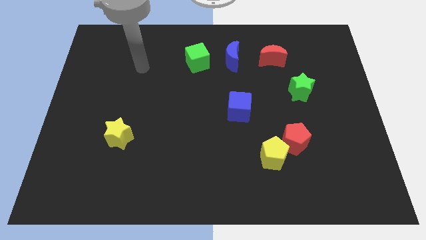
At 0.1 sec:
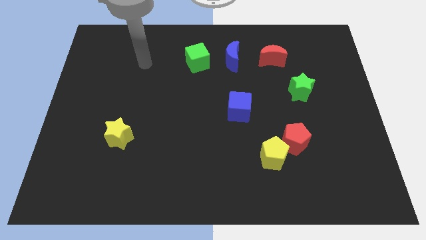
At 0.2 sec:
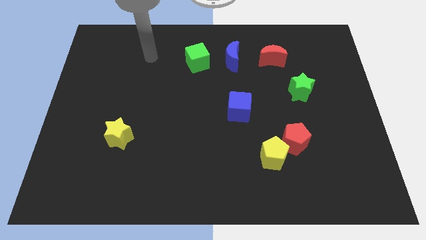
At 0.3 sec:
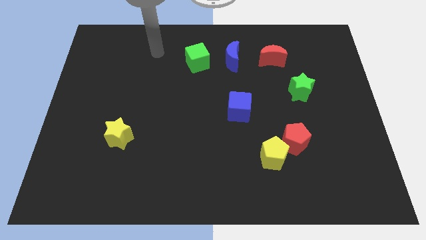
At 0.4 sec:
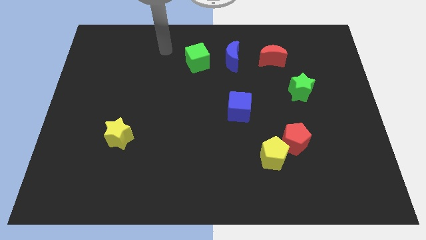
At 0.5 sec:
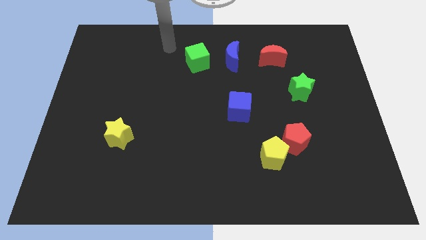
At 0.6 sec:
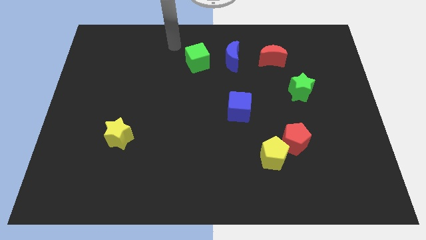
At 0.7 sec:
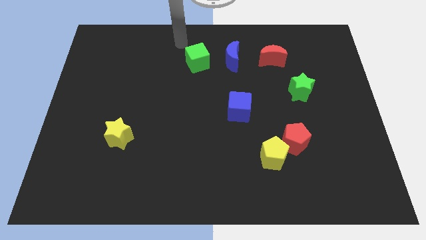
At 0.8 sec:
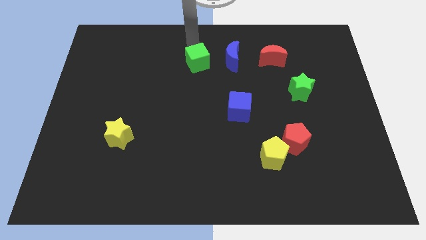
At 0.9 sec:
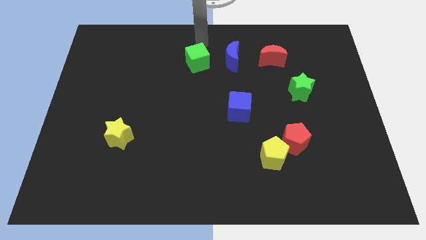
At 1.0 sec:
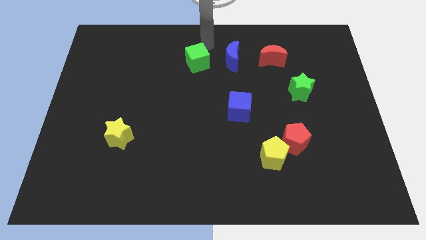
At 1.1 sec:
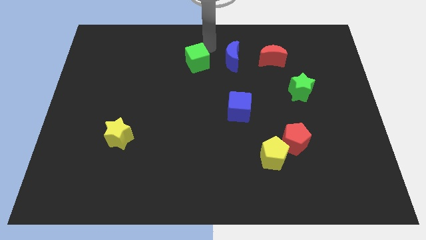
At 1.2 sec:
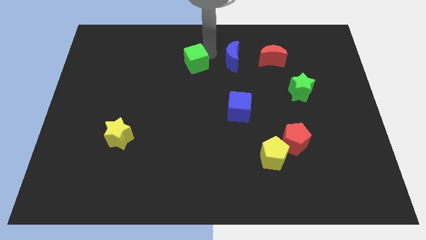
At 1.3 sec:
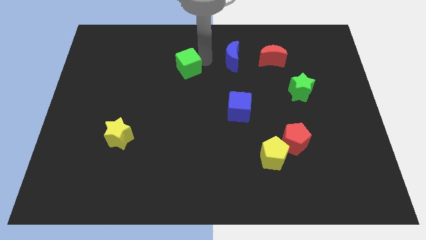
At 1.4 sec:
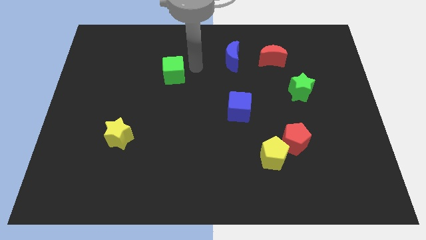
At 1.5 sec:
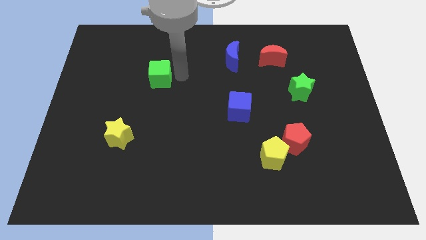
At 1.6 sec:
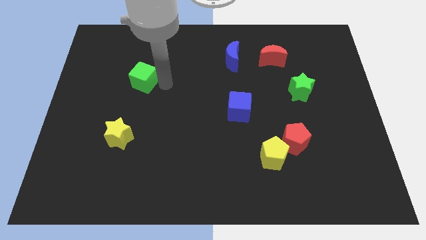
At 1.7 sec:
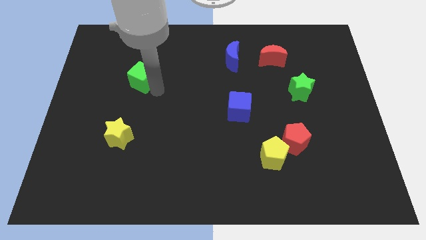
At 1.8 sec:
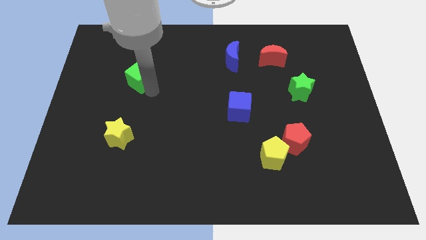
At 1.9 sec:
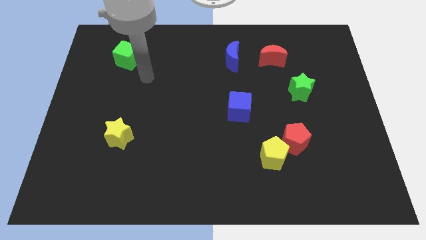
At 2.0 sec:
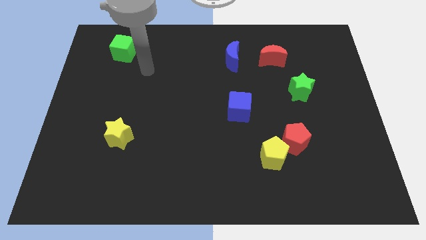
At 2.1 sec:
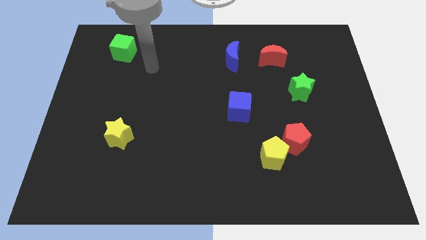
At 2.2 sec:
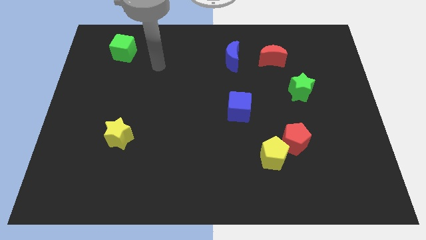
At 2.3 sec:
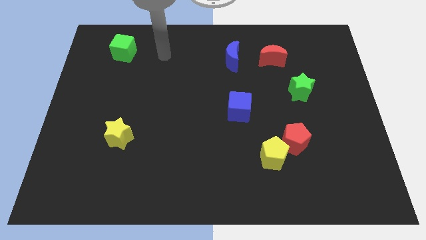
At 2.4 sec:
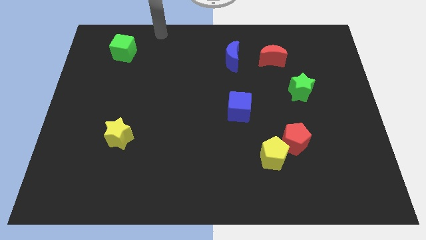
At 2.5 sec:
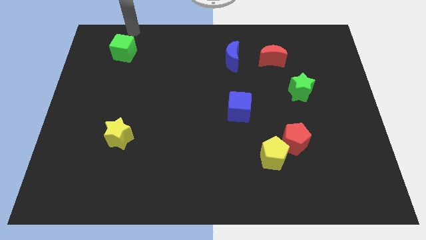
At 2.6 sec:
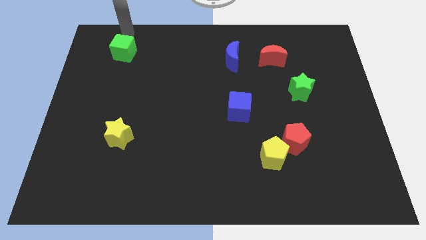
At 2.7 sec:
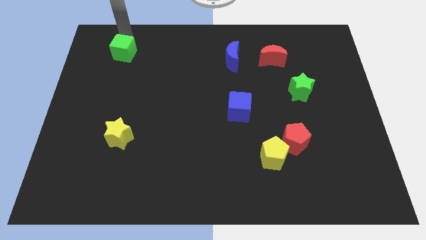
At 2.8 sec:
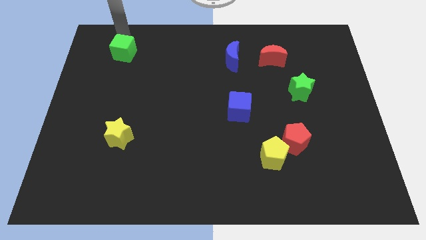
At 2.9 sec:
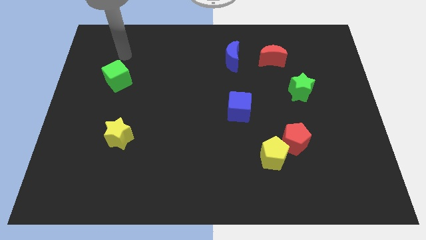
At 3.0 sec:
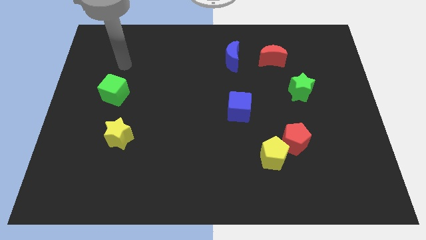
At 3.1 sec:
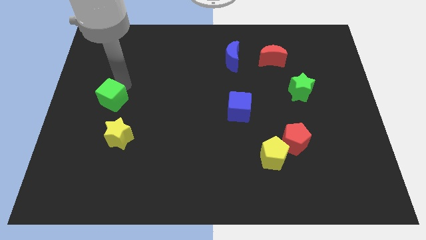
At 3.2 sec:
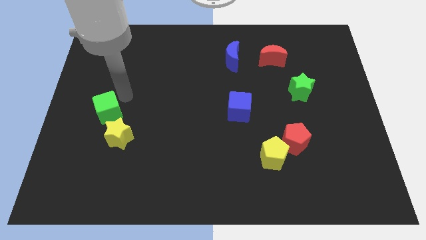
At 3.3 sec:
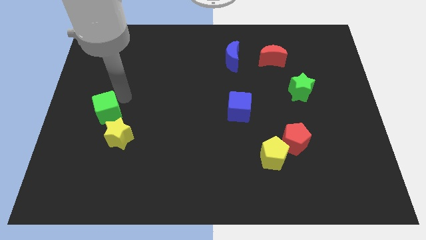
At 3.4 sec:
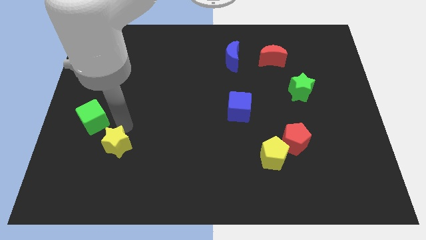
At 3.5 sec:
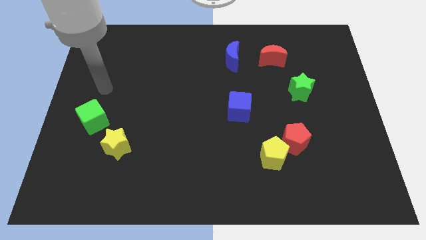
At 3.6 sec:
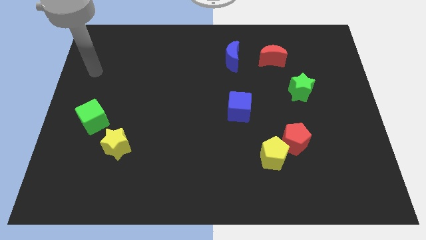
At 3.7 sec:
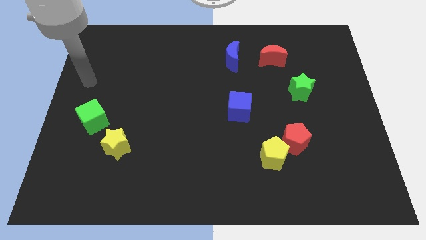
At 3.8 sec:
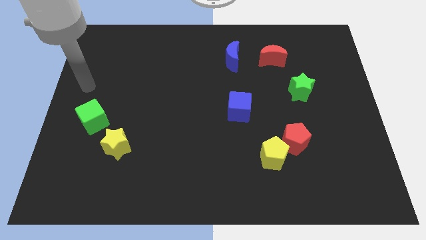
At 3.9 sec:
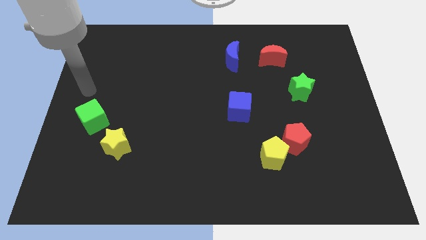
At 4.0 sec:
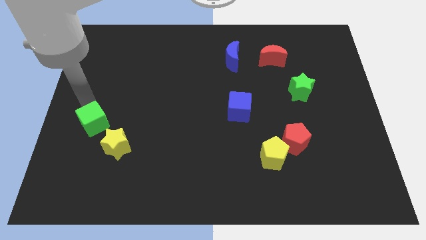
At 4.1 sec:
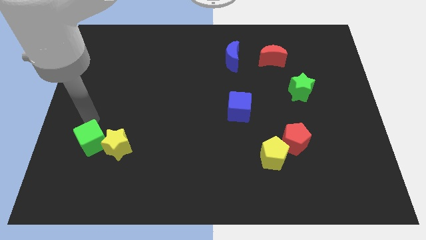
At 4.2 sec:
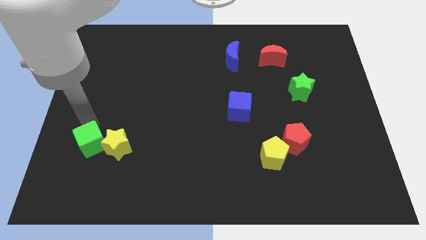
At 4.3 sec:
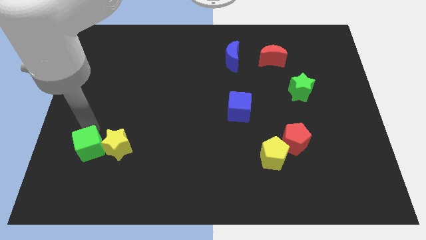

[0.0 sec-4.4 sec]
put the green cube next to the yellow star

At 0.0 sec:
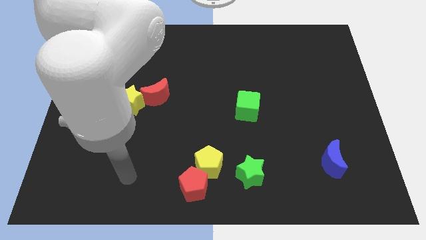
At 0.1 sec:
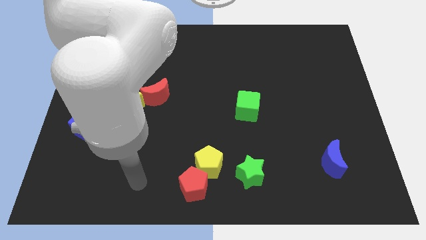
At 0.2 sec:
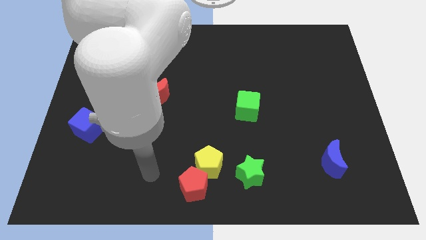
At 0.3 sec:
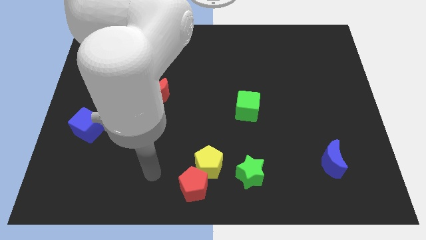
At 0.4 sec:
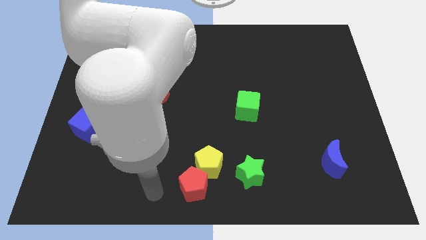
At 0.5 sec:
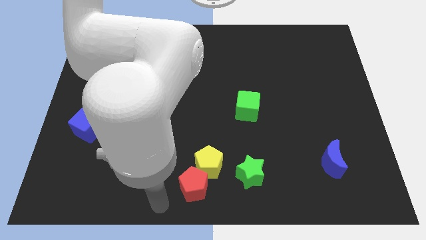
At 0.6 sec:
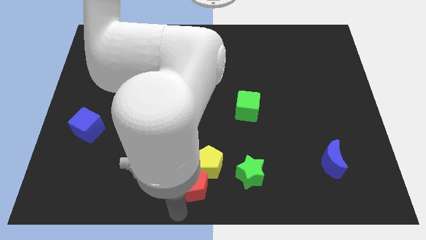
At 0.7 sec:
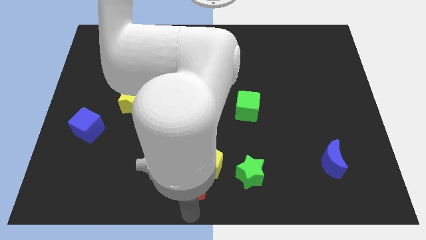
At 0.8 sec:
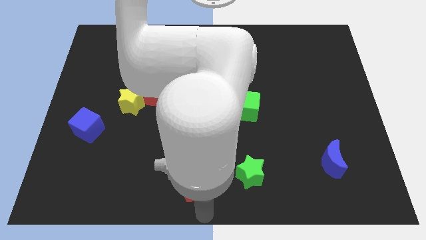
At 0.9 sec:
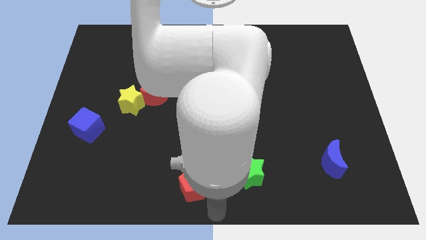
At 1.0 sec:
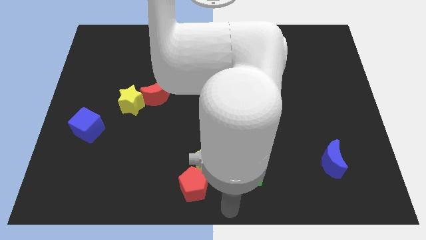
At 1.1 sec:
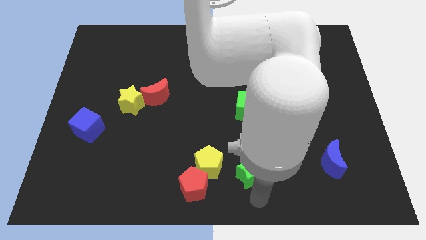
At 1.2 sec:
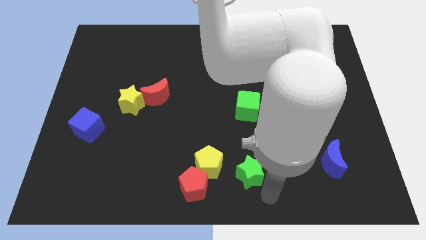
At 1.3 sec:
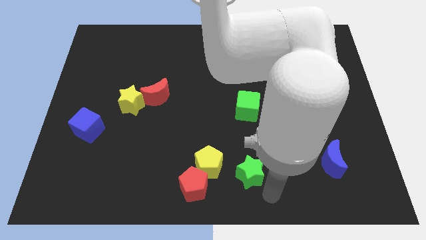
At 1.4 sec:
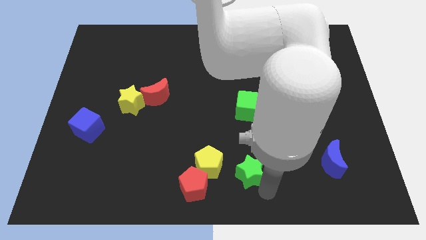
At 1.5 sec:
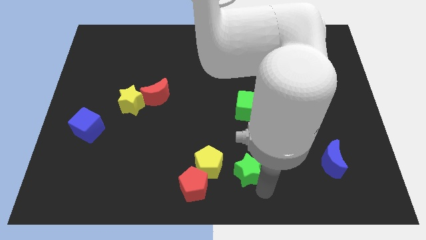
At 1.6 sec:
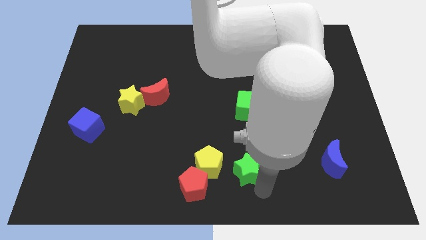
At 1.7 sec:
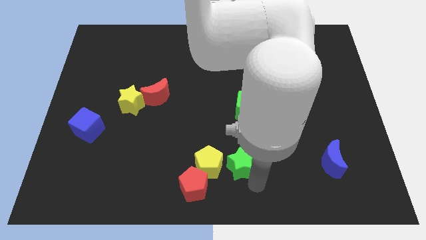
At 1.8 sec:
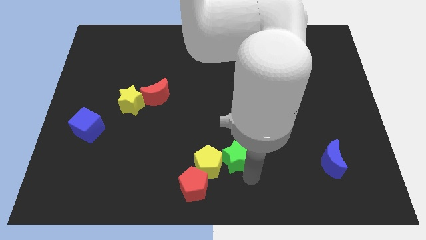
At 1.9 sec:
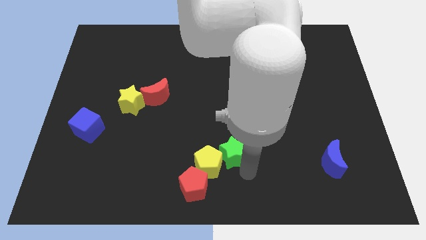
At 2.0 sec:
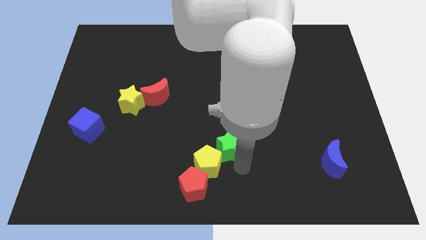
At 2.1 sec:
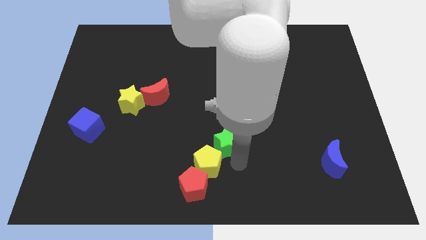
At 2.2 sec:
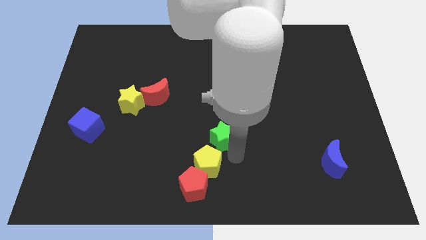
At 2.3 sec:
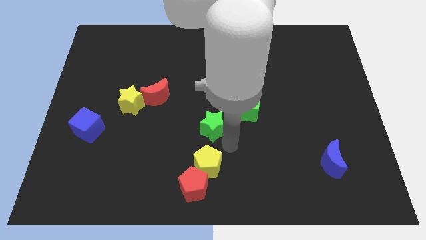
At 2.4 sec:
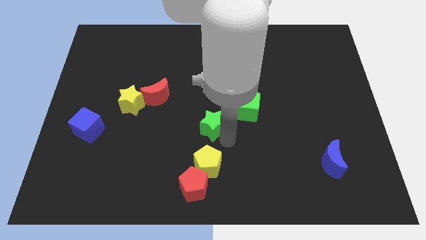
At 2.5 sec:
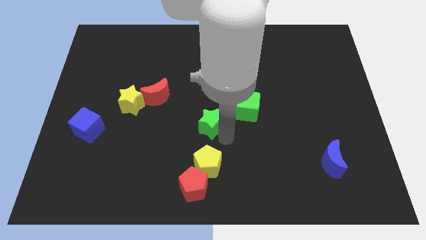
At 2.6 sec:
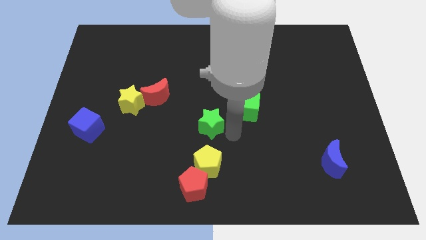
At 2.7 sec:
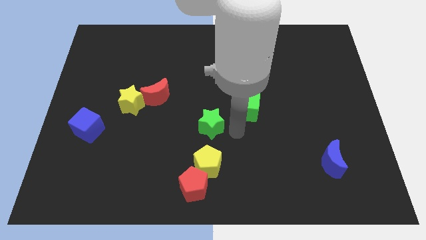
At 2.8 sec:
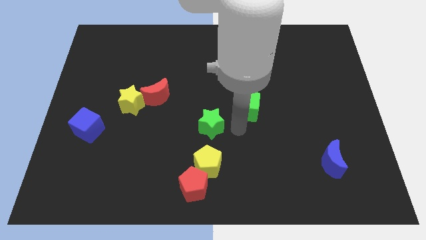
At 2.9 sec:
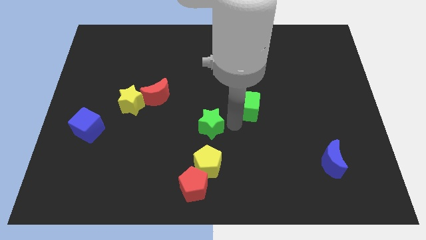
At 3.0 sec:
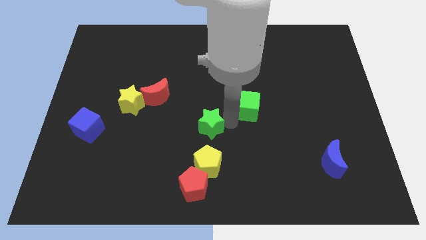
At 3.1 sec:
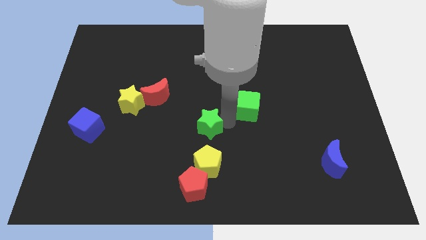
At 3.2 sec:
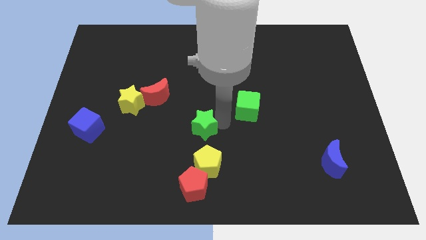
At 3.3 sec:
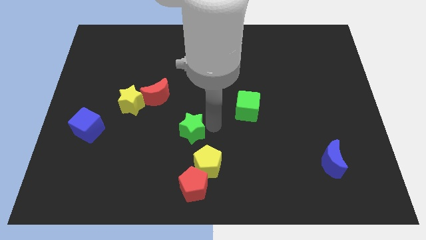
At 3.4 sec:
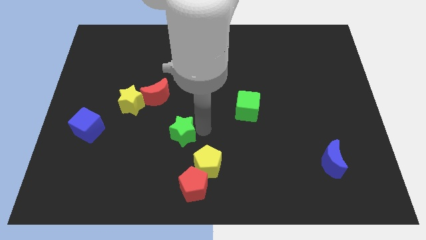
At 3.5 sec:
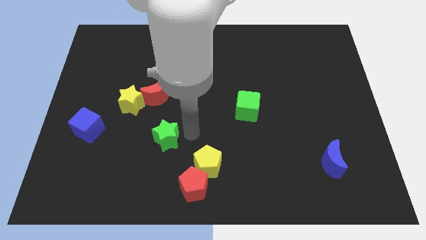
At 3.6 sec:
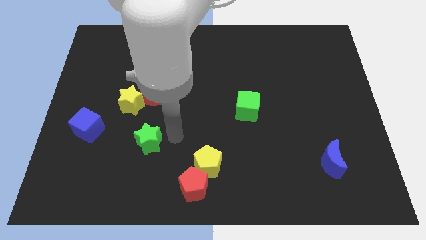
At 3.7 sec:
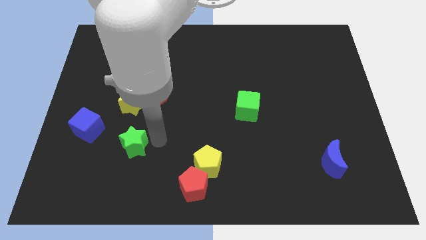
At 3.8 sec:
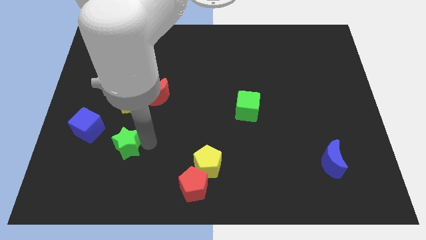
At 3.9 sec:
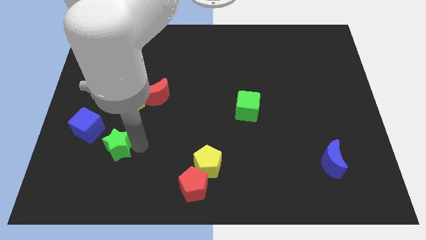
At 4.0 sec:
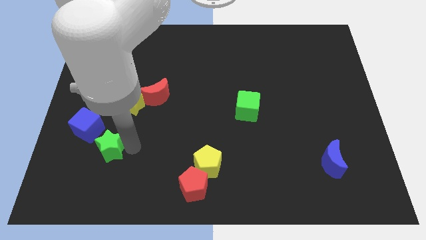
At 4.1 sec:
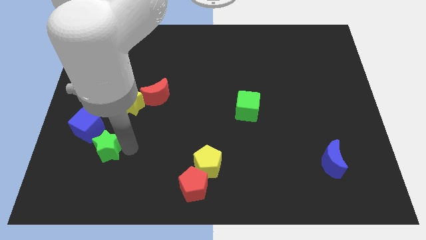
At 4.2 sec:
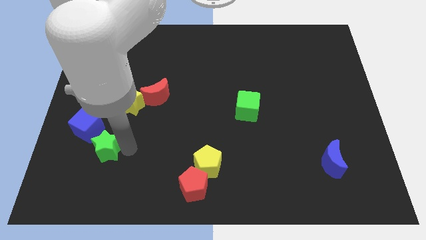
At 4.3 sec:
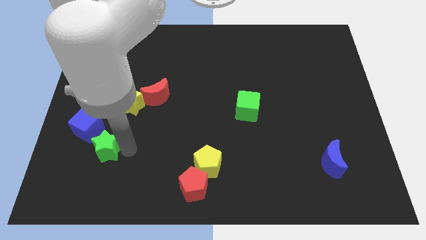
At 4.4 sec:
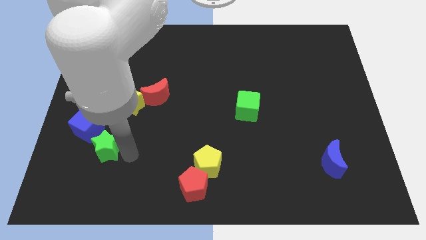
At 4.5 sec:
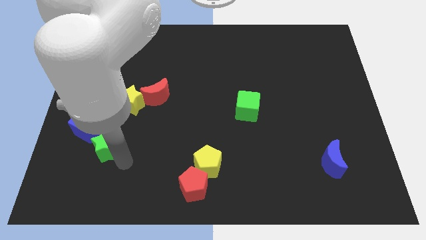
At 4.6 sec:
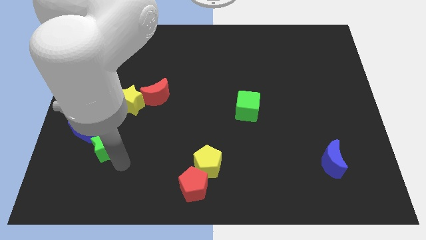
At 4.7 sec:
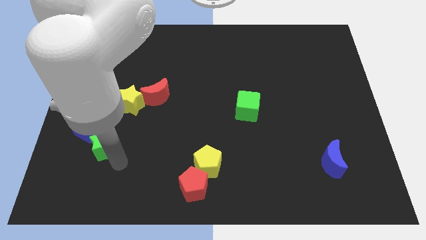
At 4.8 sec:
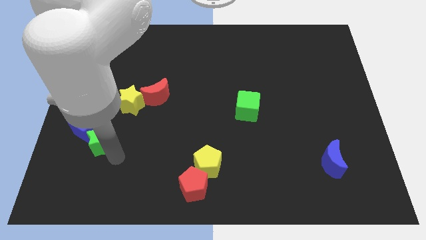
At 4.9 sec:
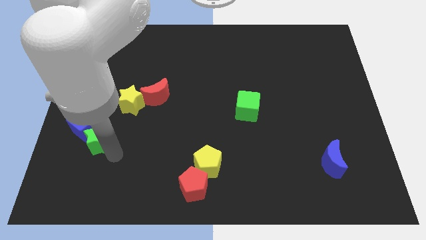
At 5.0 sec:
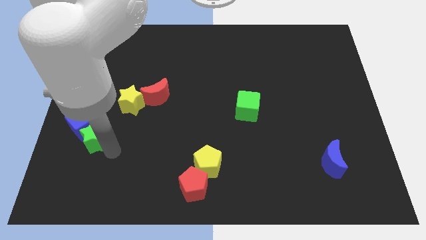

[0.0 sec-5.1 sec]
put the green star towards the blue cube
